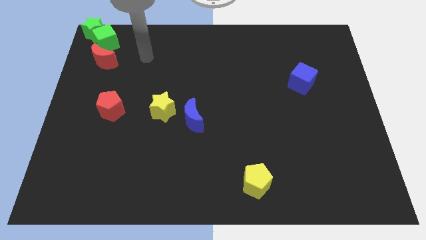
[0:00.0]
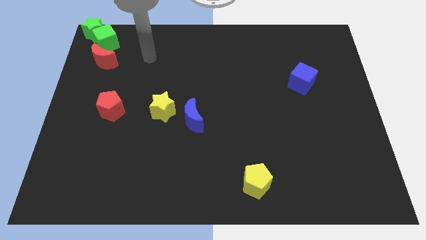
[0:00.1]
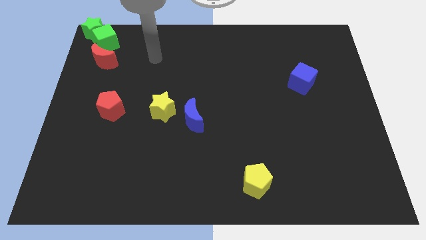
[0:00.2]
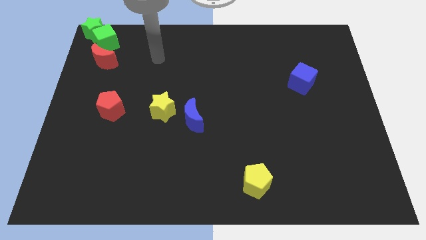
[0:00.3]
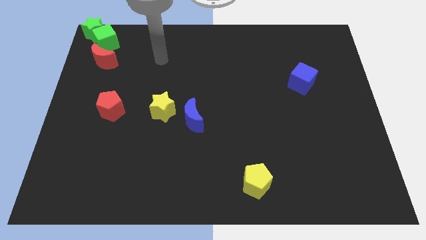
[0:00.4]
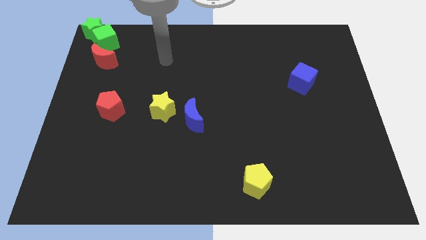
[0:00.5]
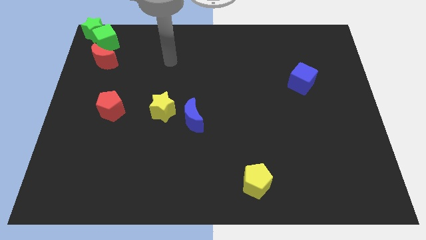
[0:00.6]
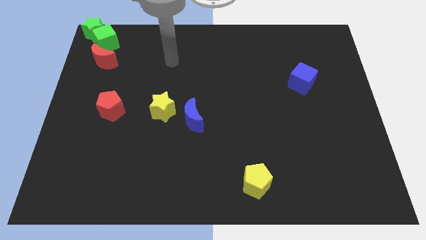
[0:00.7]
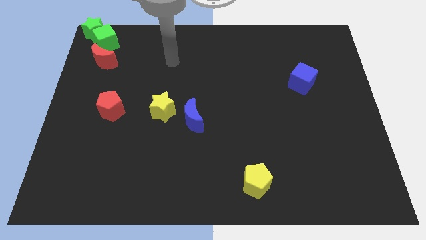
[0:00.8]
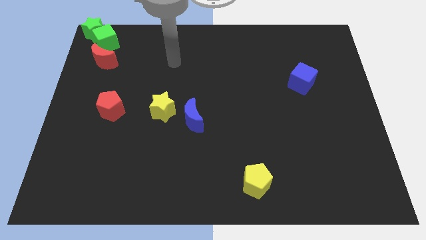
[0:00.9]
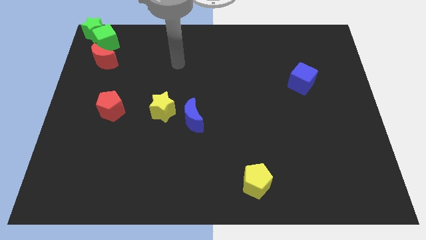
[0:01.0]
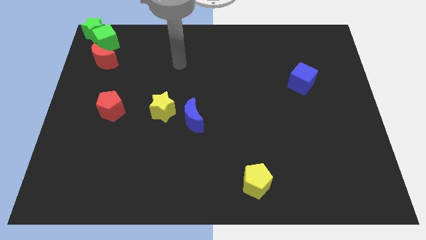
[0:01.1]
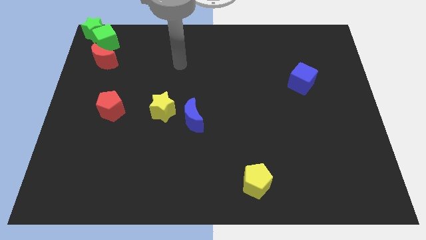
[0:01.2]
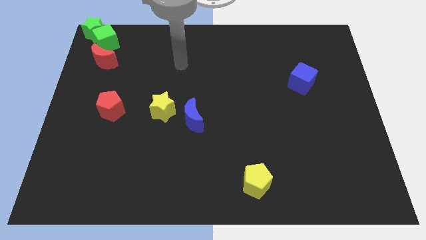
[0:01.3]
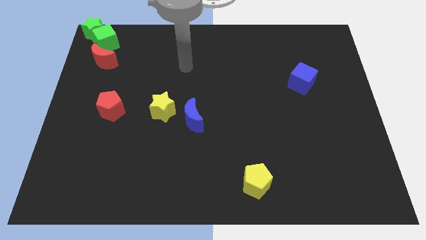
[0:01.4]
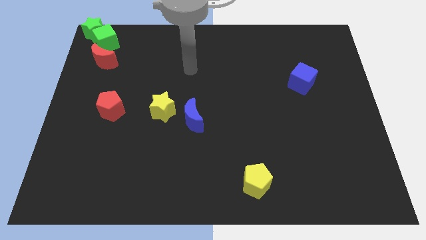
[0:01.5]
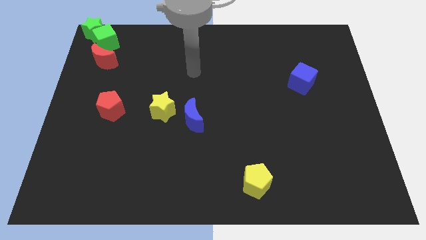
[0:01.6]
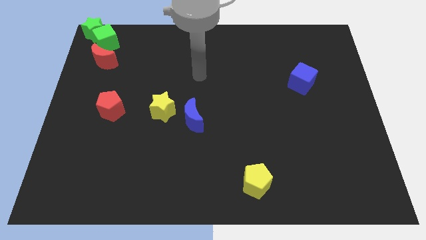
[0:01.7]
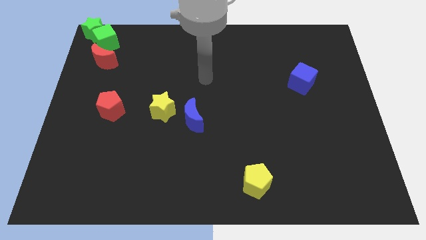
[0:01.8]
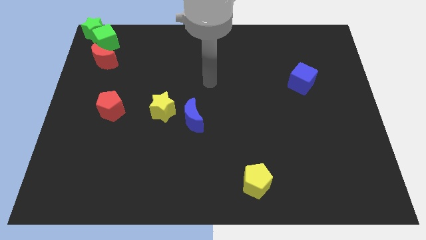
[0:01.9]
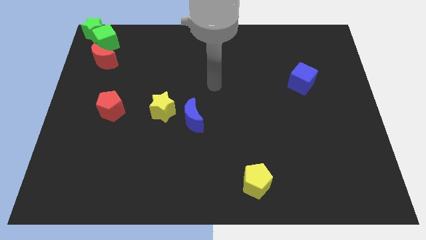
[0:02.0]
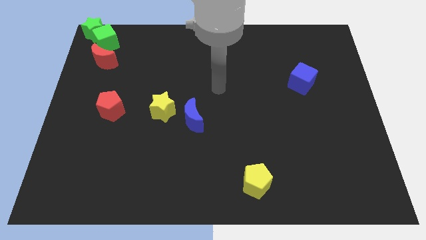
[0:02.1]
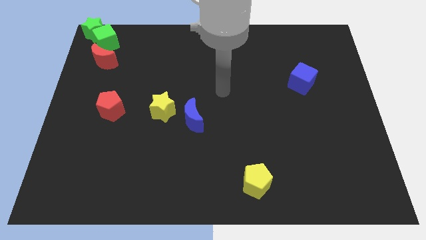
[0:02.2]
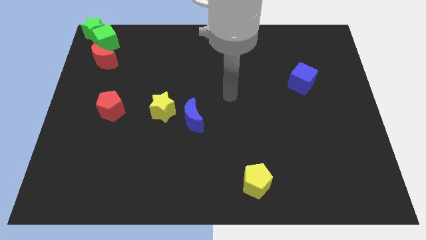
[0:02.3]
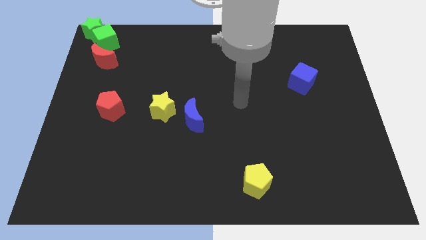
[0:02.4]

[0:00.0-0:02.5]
move your arm to the center

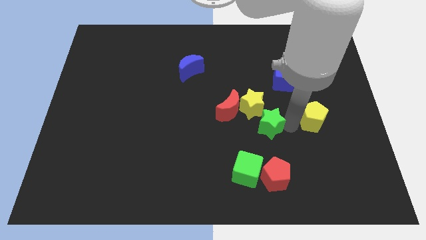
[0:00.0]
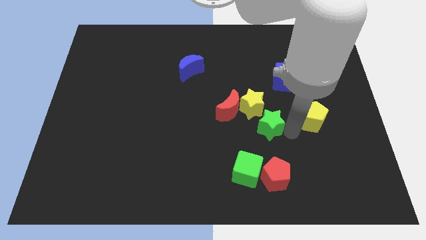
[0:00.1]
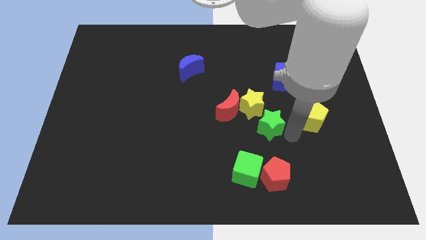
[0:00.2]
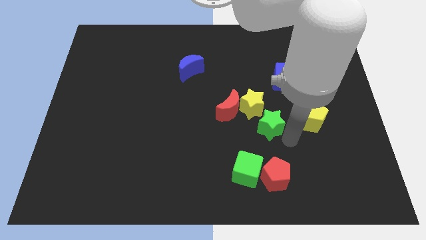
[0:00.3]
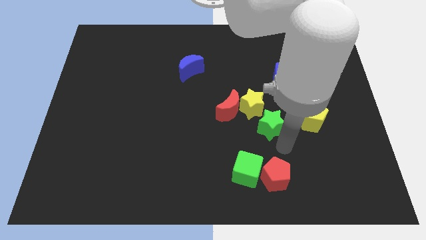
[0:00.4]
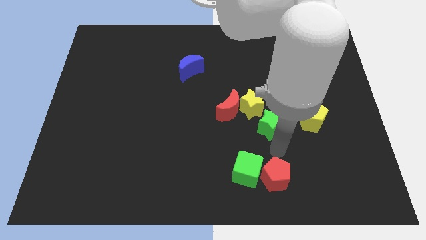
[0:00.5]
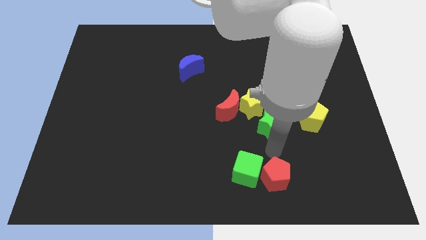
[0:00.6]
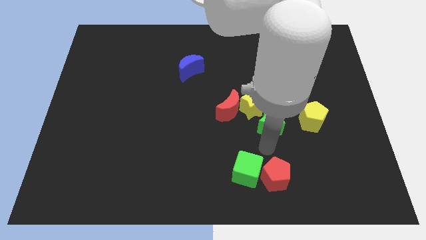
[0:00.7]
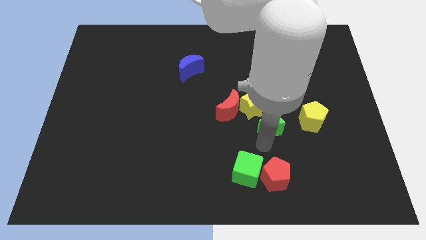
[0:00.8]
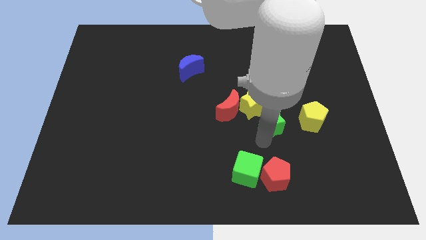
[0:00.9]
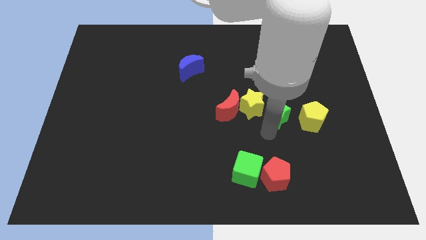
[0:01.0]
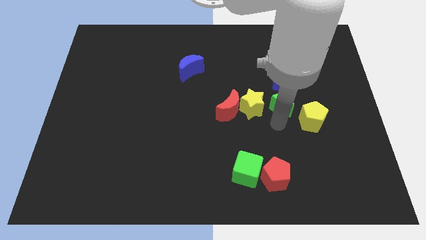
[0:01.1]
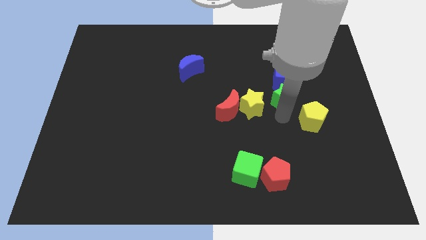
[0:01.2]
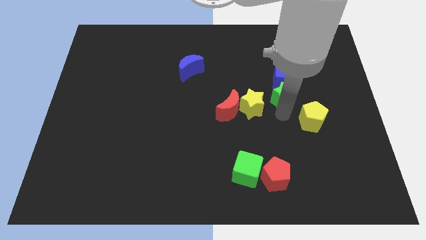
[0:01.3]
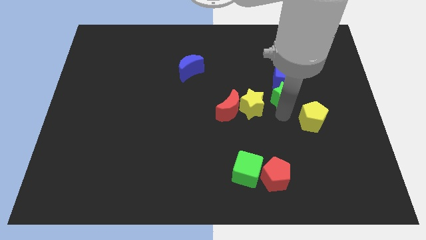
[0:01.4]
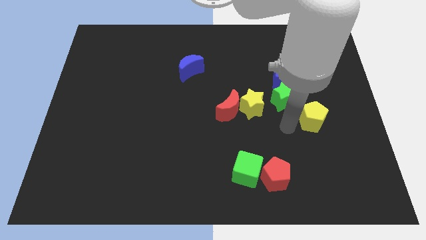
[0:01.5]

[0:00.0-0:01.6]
place the green star below the blue cube

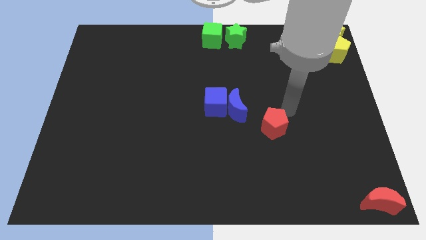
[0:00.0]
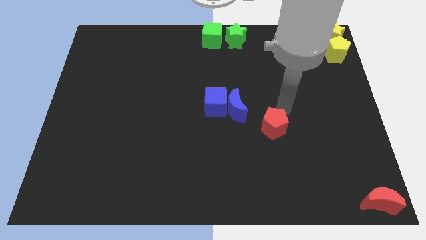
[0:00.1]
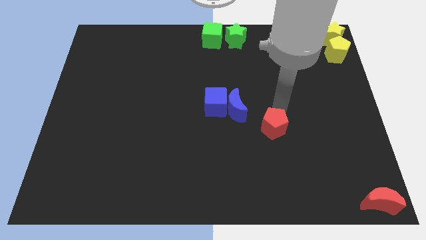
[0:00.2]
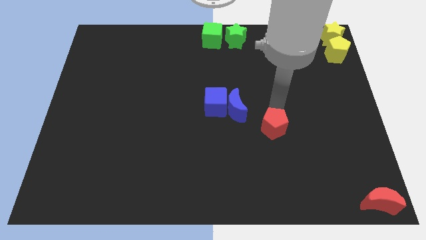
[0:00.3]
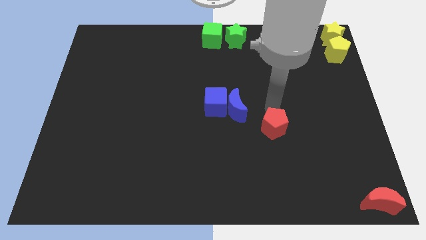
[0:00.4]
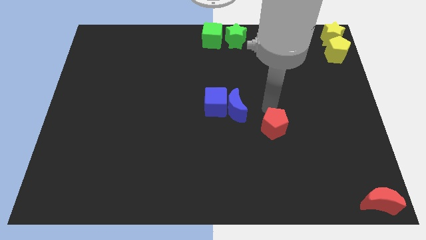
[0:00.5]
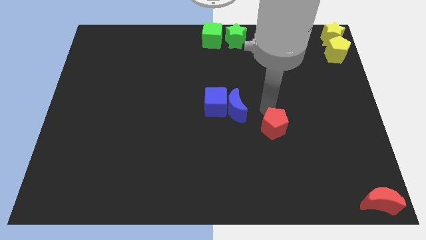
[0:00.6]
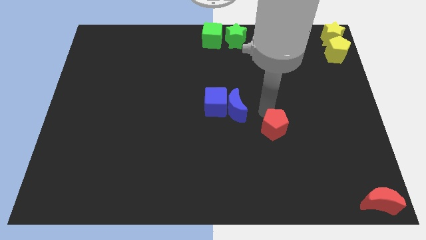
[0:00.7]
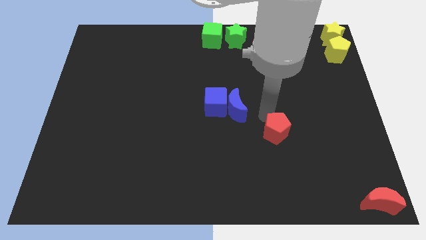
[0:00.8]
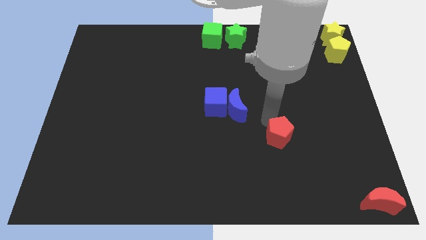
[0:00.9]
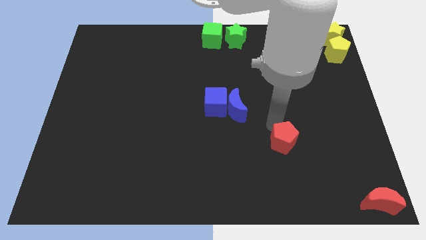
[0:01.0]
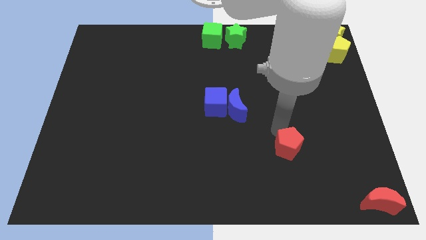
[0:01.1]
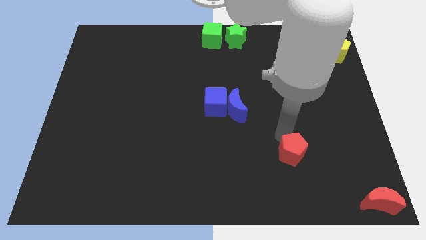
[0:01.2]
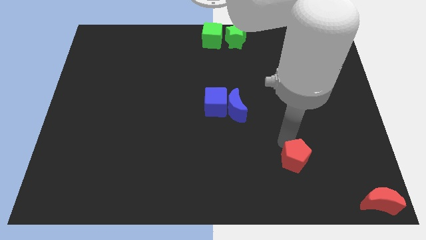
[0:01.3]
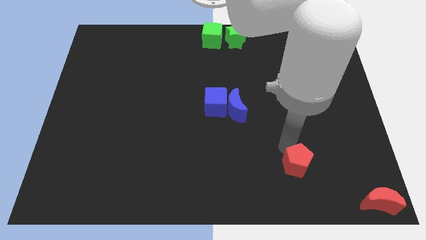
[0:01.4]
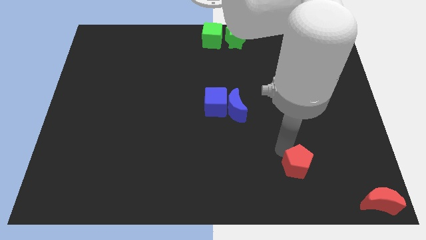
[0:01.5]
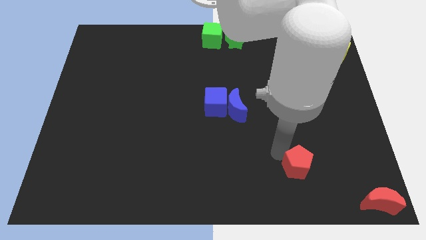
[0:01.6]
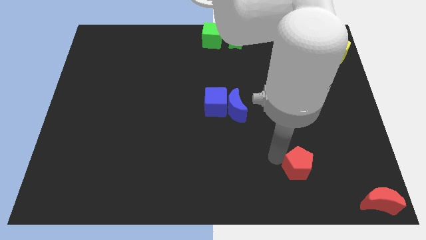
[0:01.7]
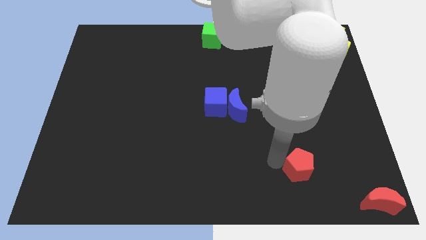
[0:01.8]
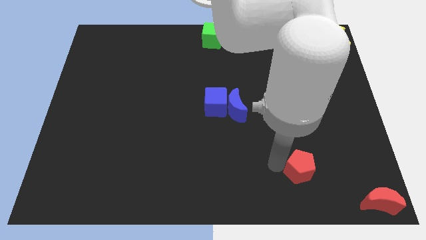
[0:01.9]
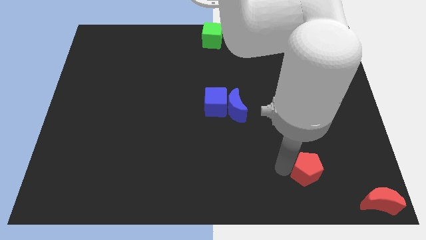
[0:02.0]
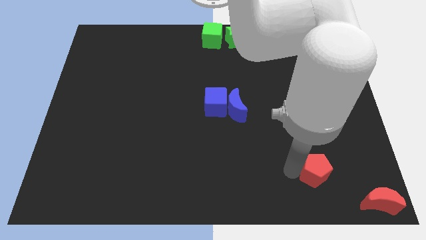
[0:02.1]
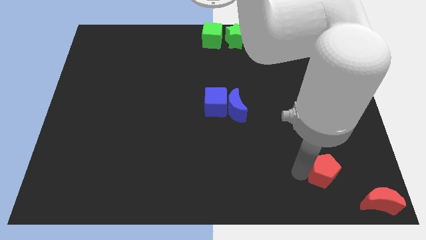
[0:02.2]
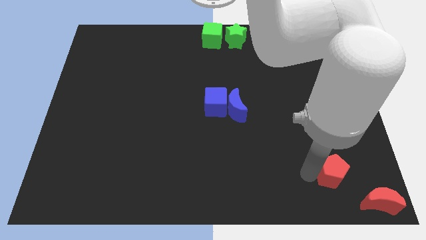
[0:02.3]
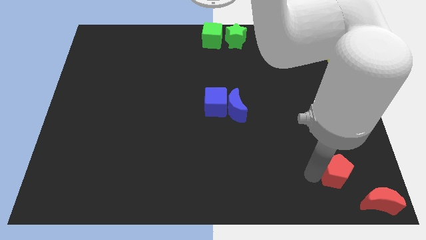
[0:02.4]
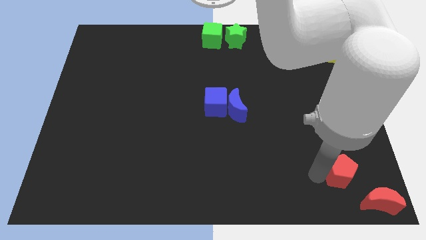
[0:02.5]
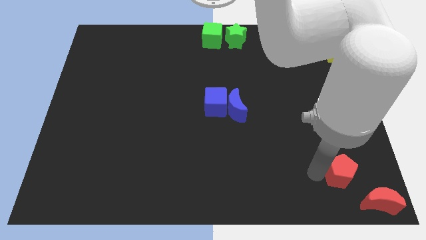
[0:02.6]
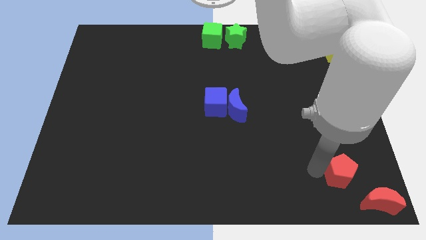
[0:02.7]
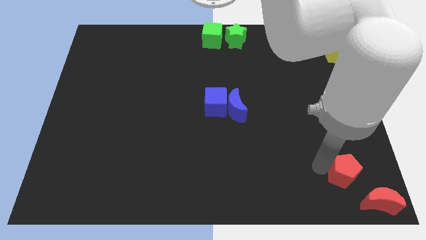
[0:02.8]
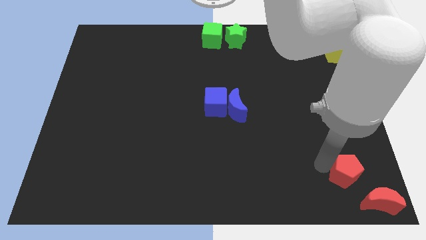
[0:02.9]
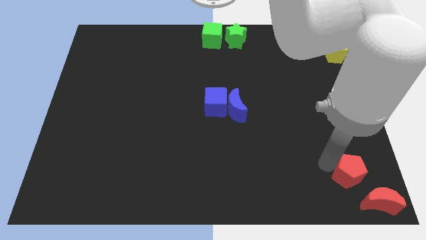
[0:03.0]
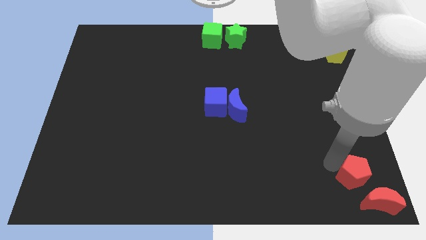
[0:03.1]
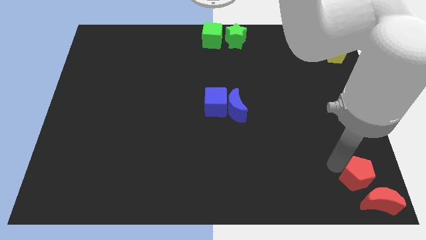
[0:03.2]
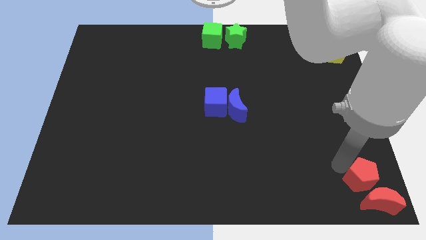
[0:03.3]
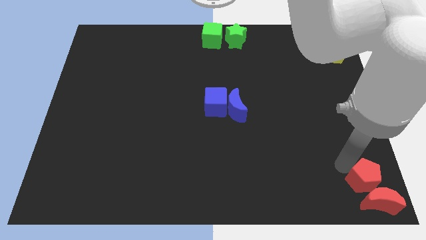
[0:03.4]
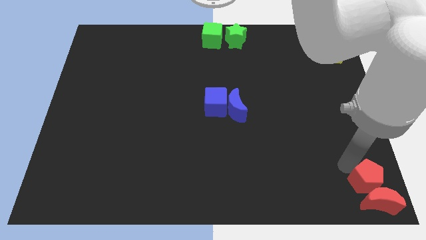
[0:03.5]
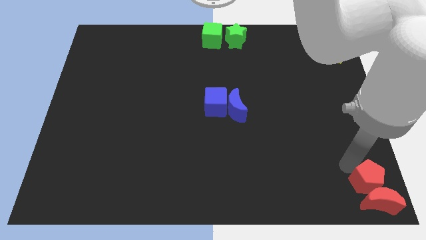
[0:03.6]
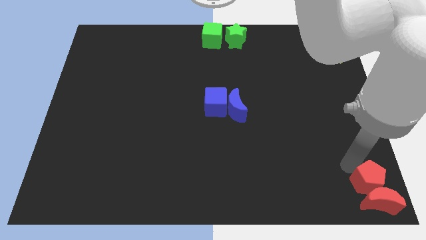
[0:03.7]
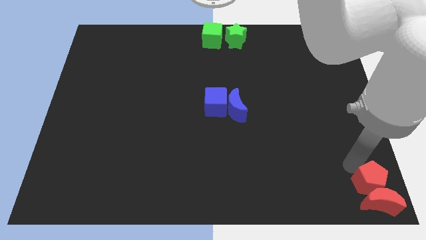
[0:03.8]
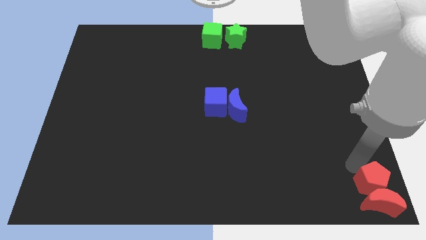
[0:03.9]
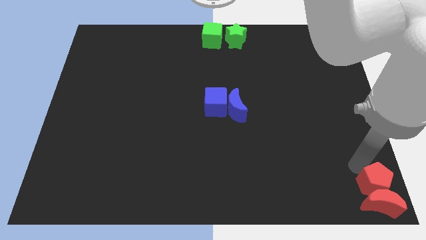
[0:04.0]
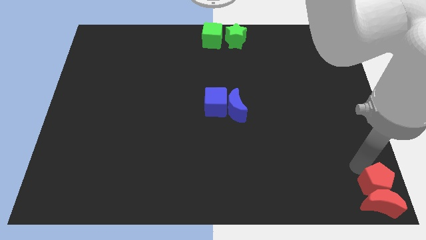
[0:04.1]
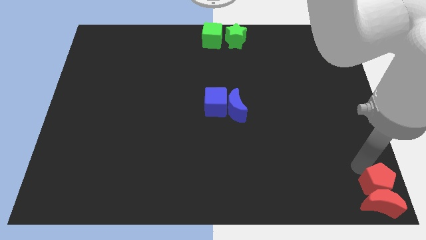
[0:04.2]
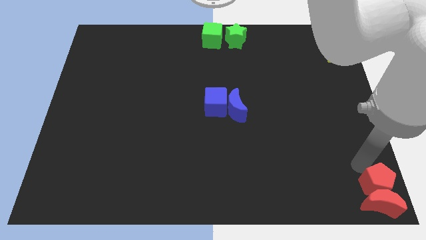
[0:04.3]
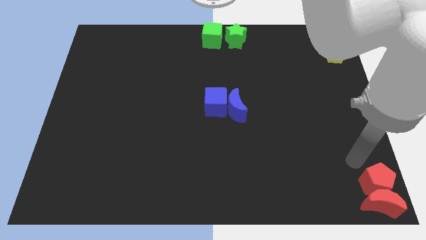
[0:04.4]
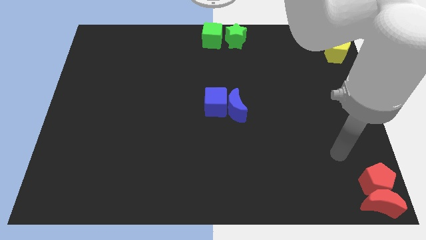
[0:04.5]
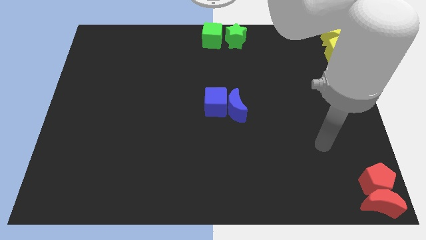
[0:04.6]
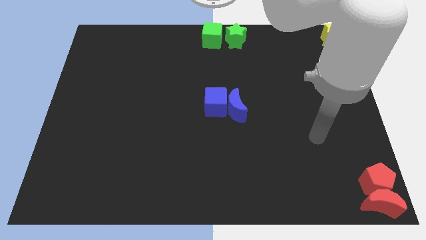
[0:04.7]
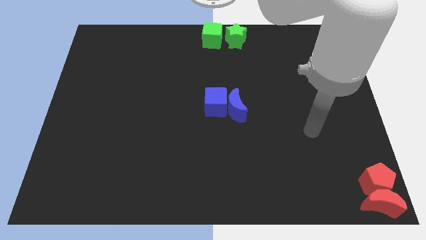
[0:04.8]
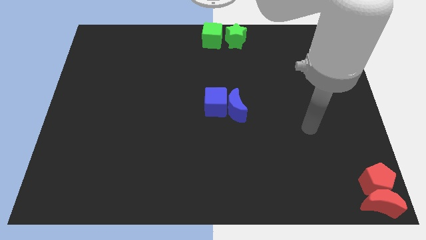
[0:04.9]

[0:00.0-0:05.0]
move red pentagon into red moon
